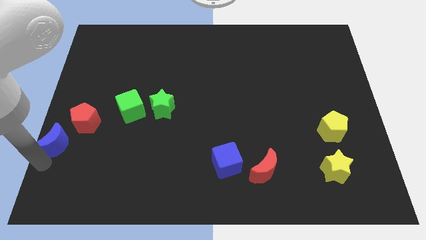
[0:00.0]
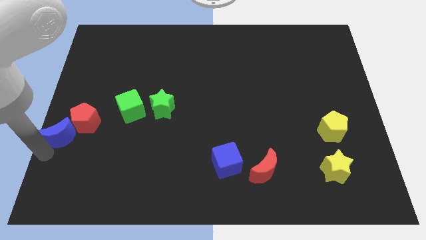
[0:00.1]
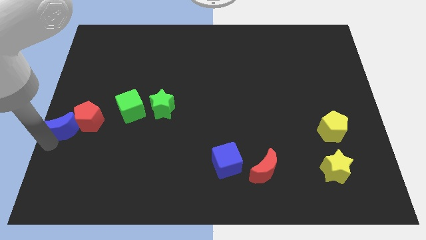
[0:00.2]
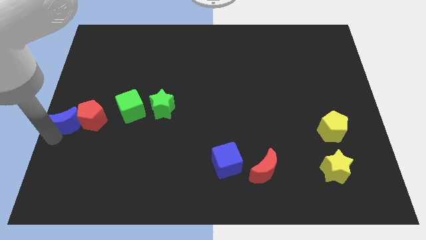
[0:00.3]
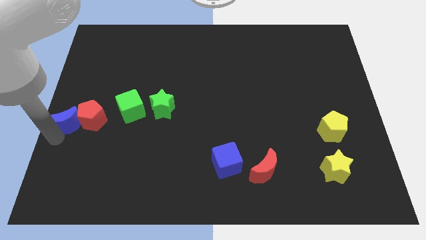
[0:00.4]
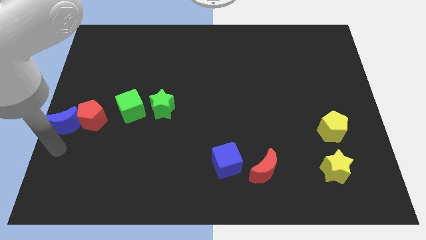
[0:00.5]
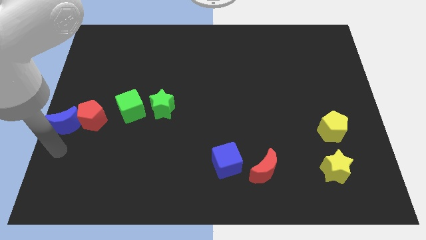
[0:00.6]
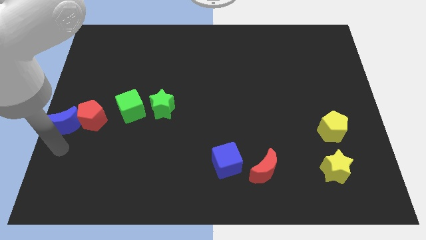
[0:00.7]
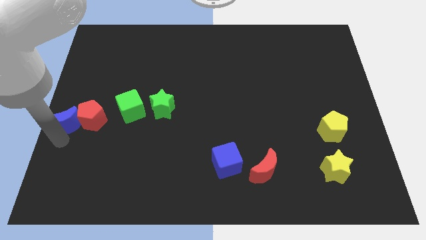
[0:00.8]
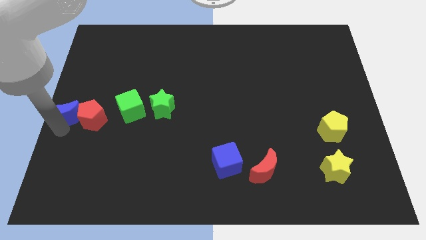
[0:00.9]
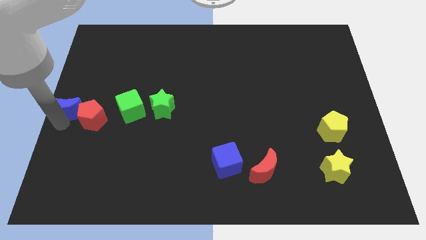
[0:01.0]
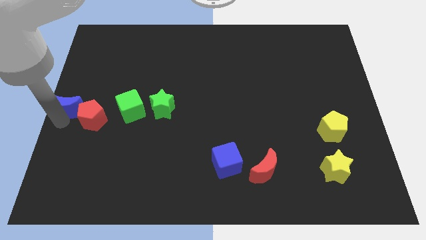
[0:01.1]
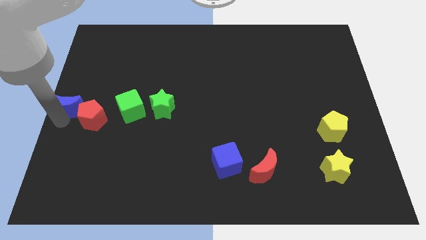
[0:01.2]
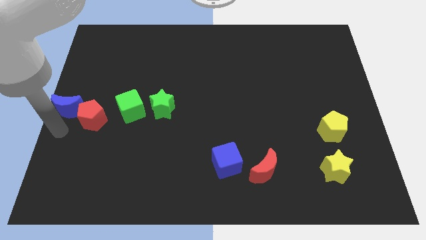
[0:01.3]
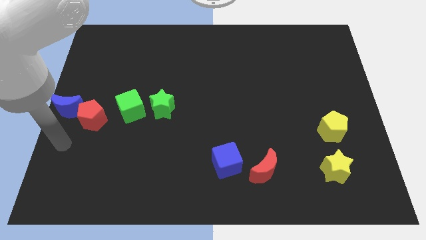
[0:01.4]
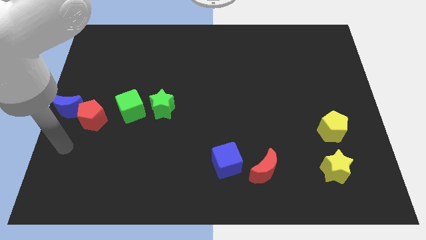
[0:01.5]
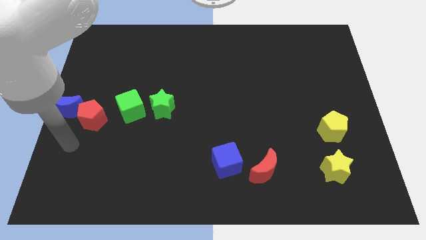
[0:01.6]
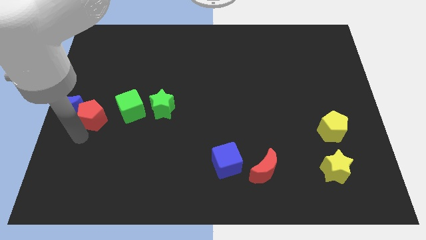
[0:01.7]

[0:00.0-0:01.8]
move the blue moon to center left of the board

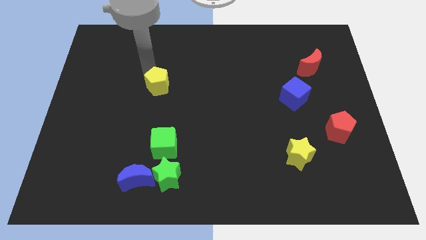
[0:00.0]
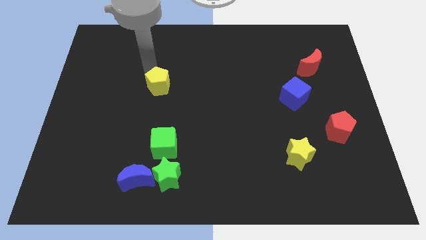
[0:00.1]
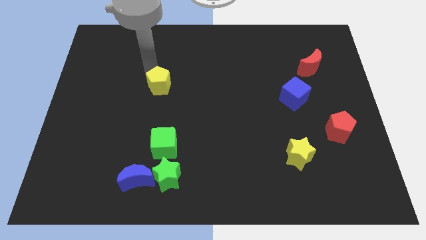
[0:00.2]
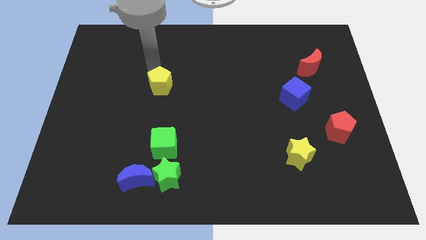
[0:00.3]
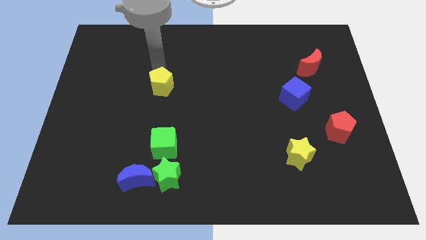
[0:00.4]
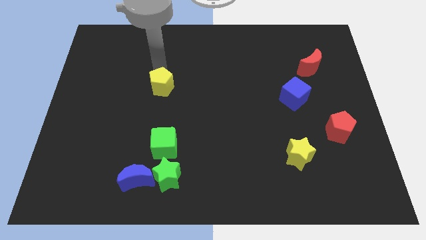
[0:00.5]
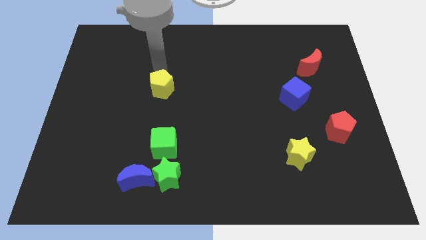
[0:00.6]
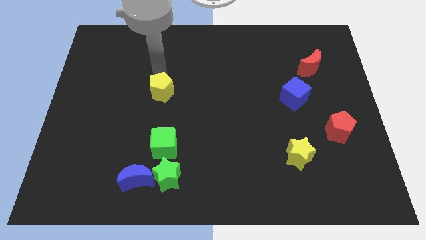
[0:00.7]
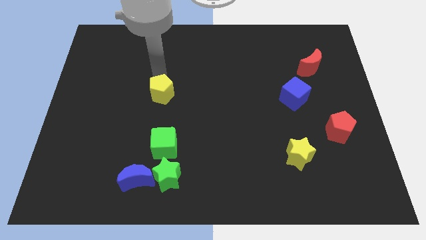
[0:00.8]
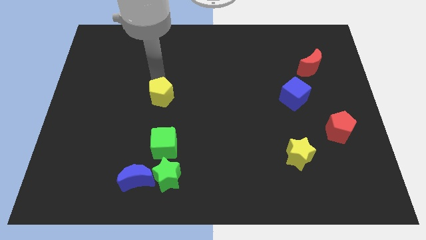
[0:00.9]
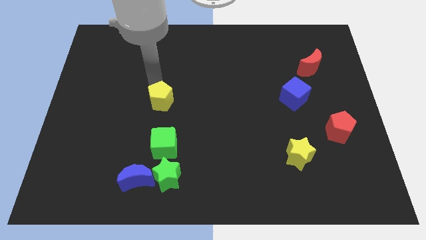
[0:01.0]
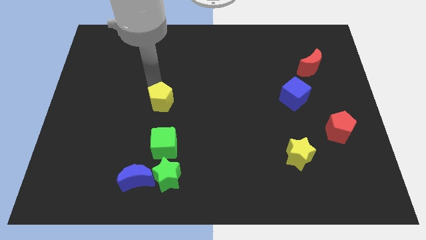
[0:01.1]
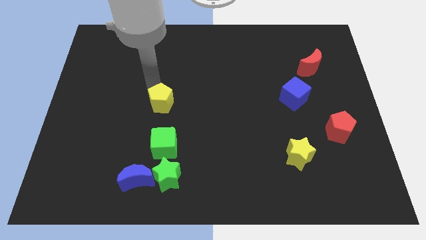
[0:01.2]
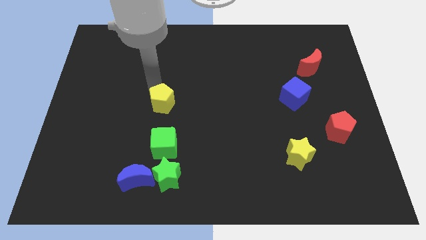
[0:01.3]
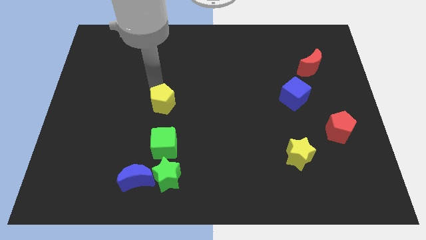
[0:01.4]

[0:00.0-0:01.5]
place the yellow pentagon horizontally to the left side of the blue cube

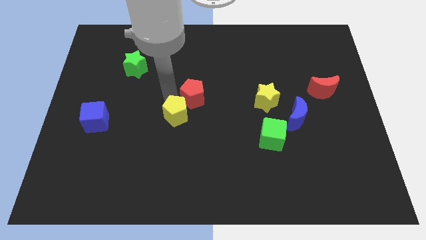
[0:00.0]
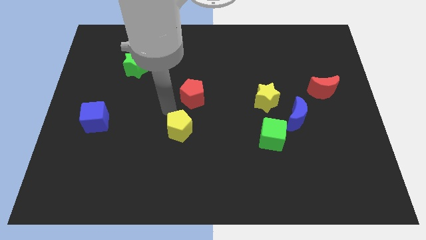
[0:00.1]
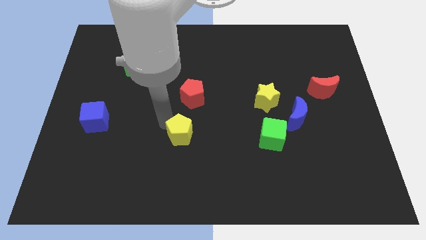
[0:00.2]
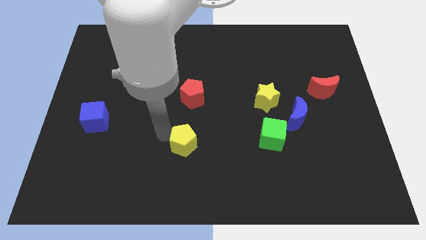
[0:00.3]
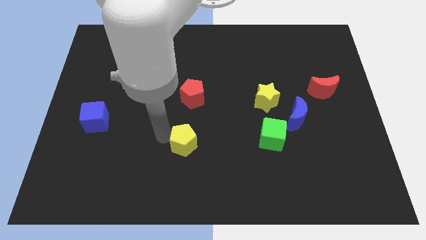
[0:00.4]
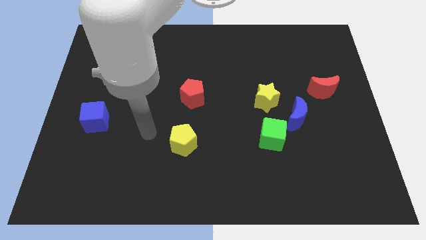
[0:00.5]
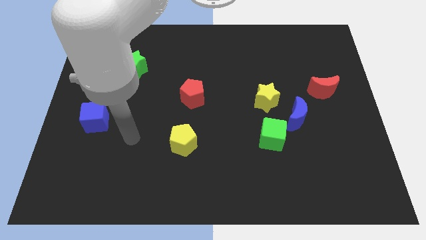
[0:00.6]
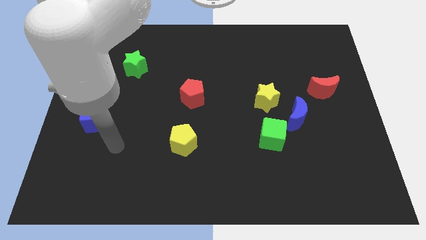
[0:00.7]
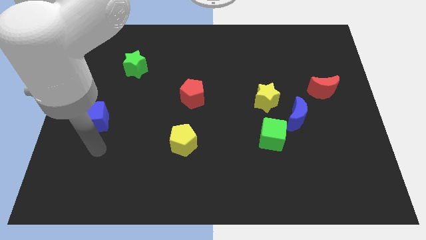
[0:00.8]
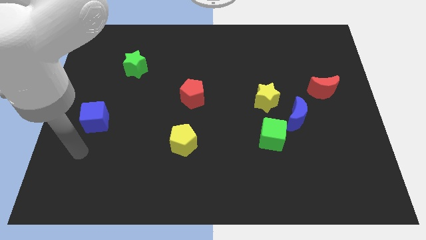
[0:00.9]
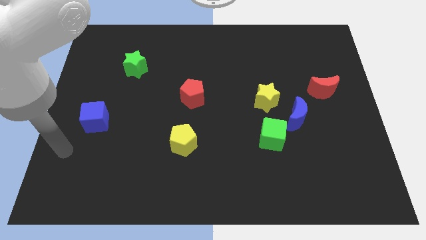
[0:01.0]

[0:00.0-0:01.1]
separate yellow pentagon from red pentagon

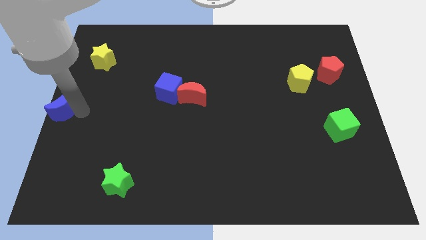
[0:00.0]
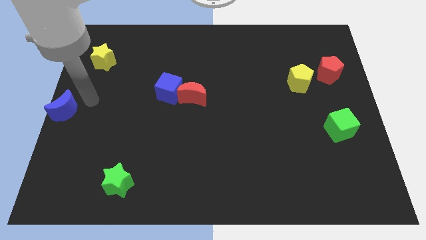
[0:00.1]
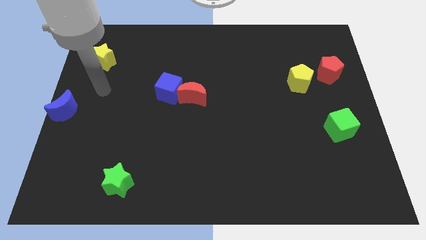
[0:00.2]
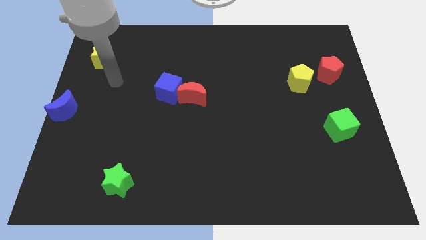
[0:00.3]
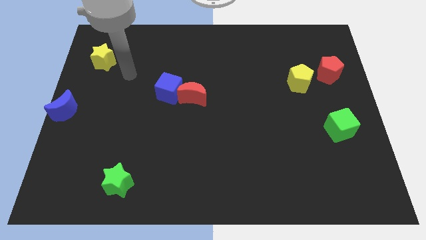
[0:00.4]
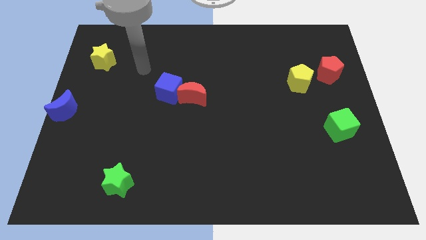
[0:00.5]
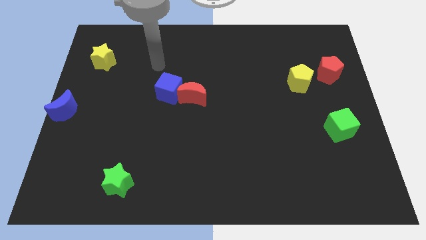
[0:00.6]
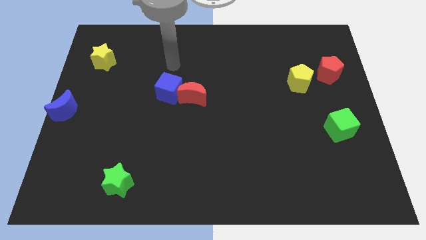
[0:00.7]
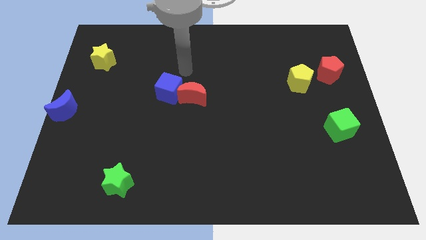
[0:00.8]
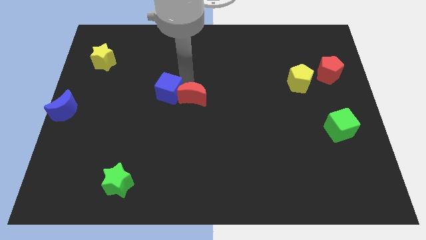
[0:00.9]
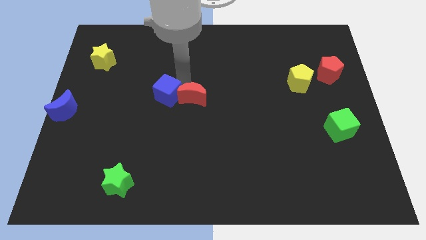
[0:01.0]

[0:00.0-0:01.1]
place your arm to the top of red moon

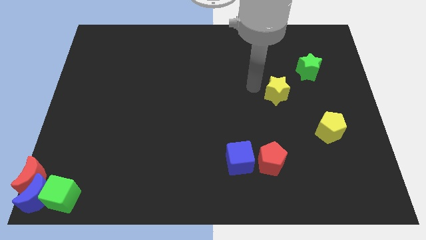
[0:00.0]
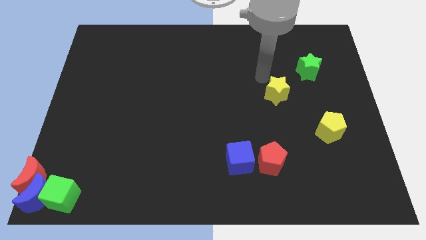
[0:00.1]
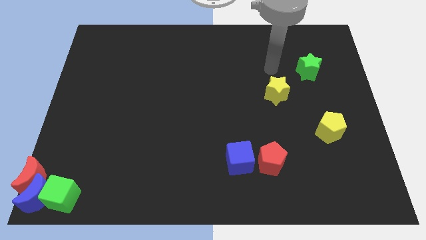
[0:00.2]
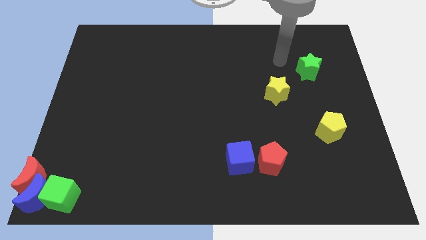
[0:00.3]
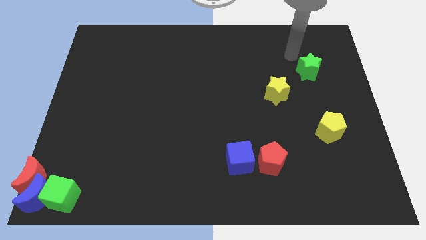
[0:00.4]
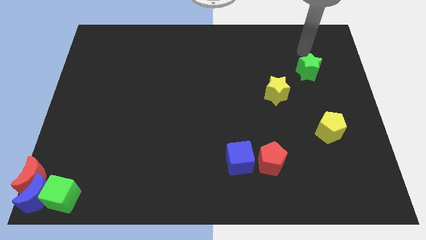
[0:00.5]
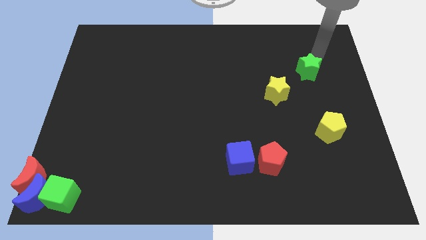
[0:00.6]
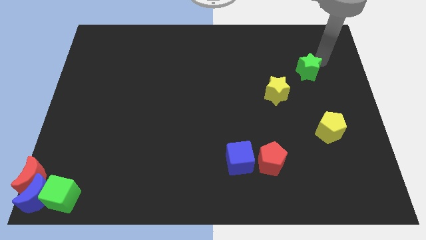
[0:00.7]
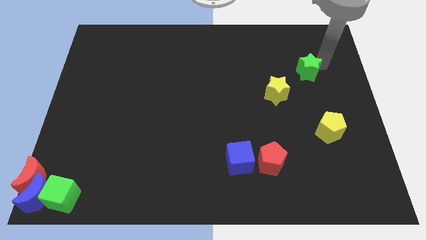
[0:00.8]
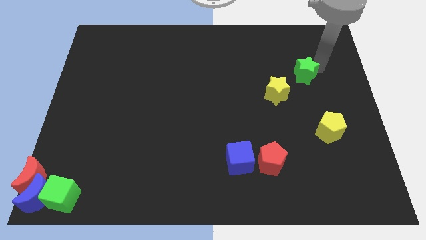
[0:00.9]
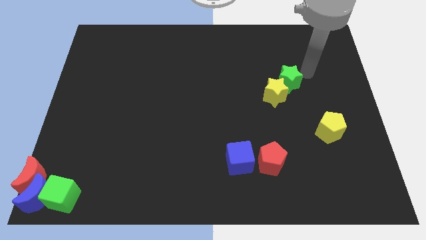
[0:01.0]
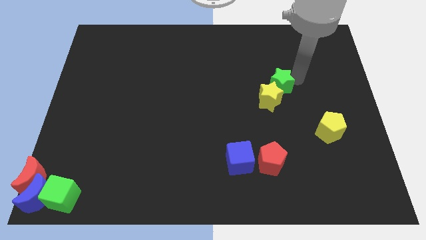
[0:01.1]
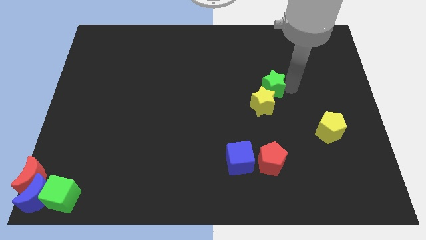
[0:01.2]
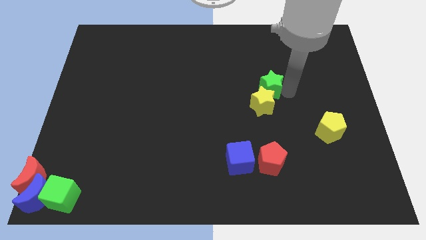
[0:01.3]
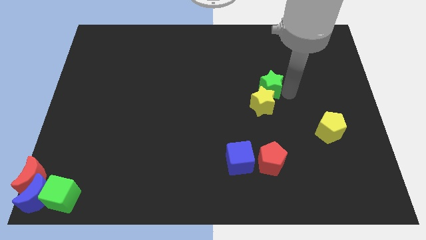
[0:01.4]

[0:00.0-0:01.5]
push yellow star with green star parallel to the left of the yellow pentagon

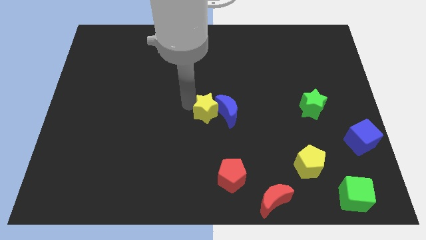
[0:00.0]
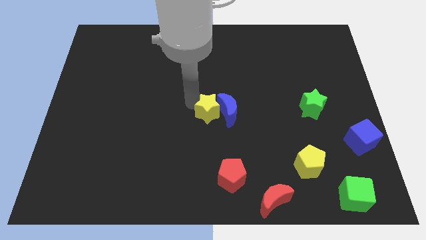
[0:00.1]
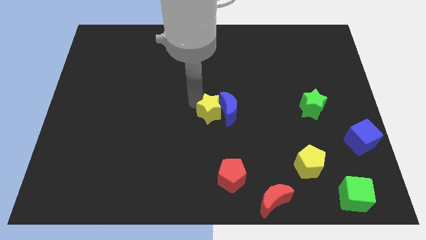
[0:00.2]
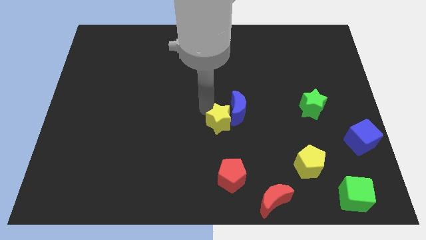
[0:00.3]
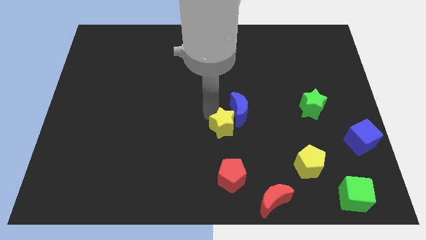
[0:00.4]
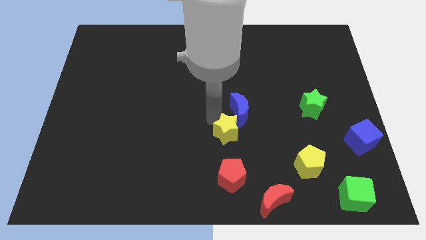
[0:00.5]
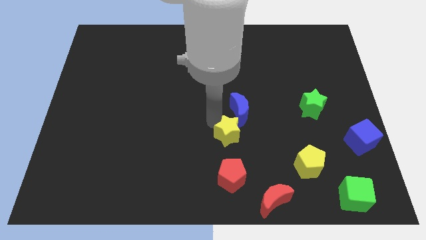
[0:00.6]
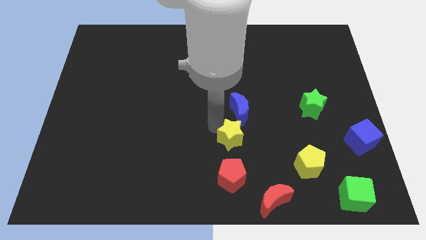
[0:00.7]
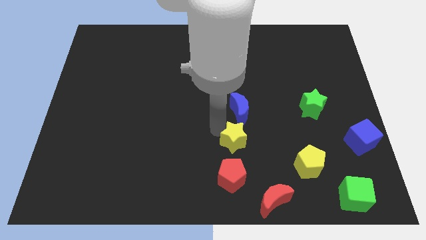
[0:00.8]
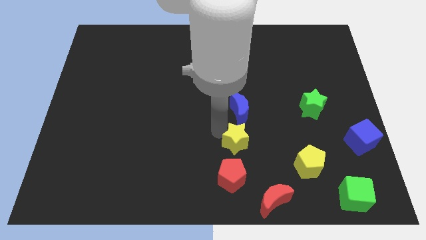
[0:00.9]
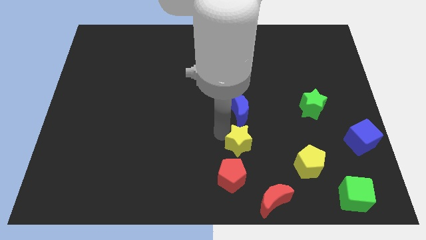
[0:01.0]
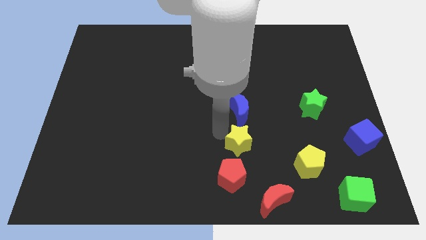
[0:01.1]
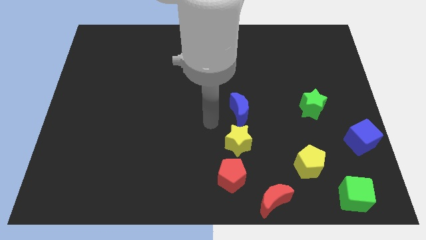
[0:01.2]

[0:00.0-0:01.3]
move the yellow star to the top red pentagon

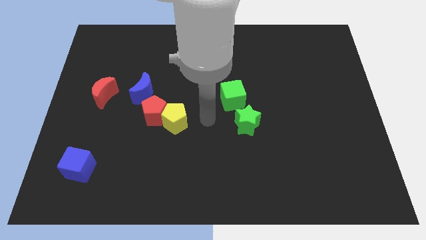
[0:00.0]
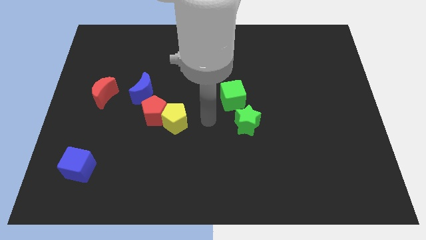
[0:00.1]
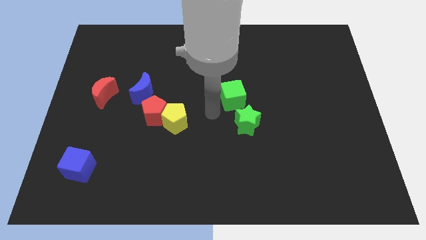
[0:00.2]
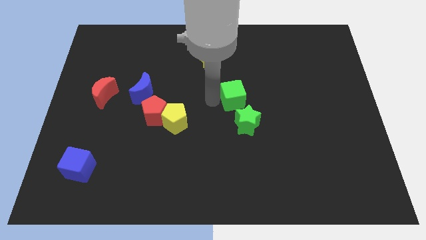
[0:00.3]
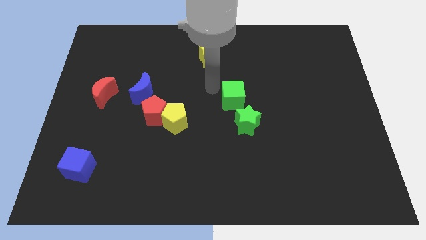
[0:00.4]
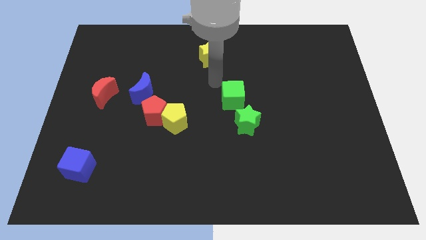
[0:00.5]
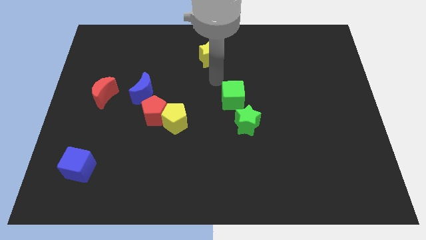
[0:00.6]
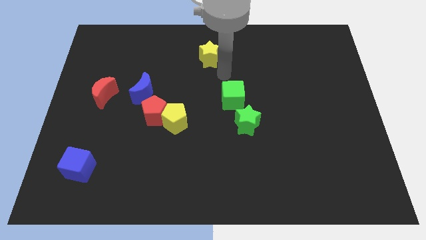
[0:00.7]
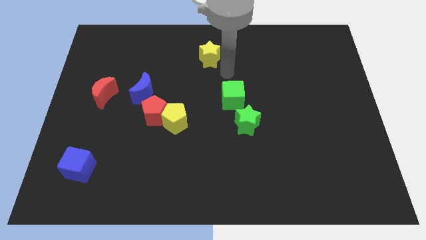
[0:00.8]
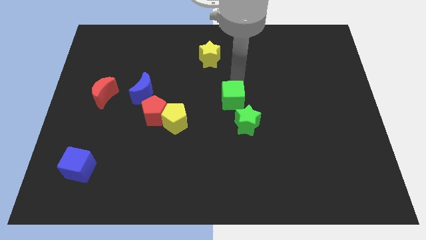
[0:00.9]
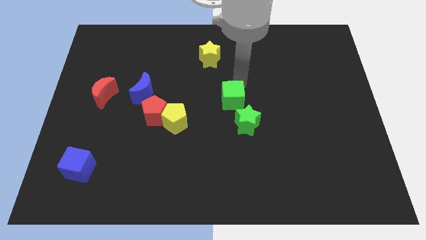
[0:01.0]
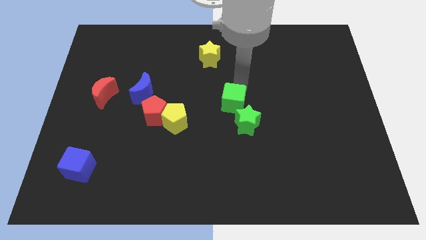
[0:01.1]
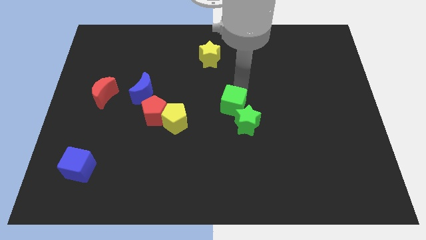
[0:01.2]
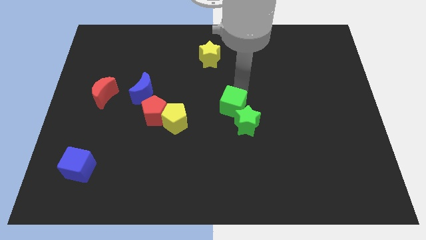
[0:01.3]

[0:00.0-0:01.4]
slightly push the green cube into the green star
